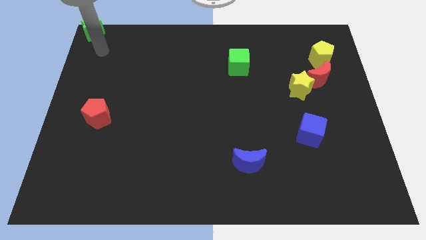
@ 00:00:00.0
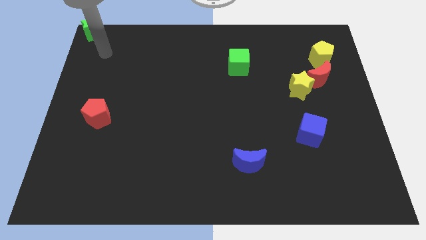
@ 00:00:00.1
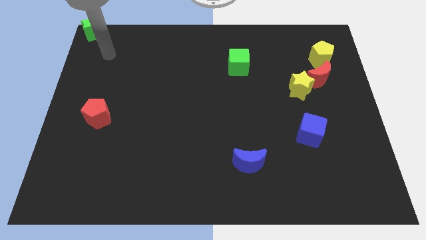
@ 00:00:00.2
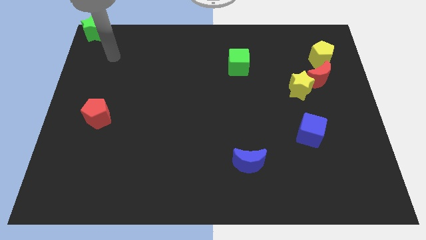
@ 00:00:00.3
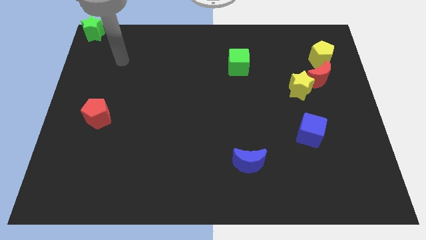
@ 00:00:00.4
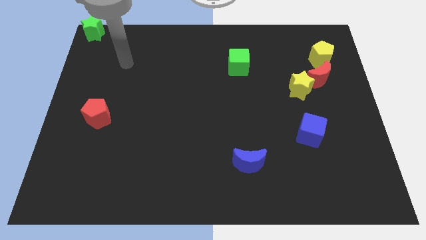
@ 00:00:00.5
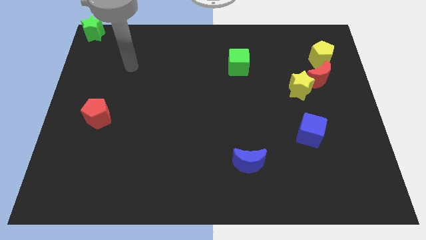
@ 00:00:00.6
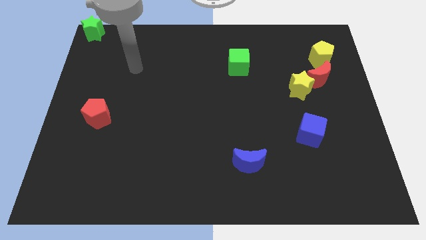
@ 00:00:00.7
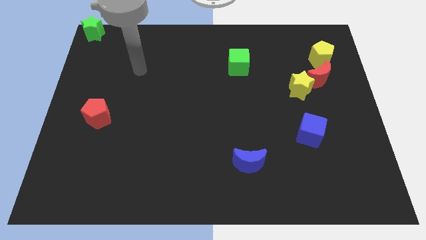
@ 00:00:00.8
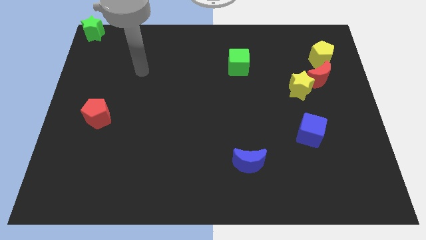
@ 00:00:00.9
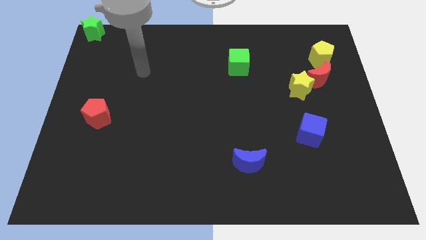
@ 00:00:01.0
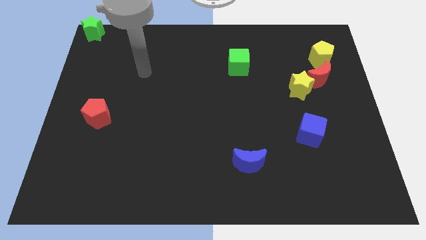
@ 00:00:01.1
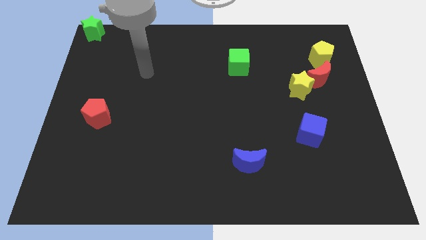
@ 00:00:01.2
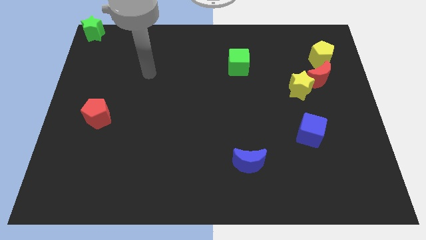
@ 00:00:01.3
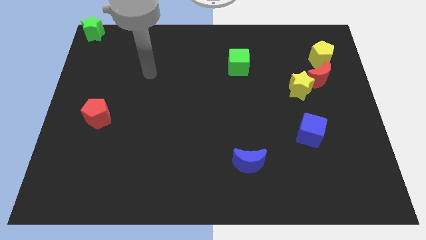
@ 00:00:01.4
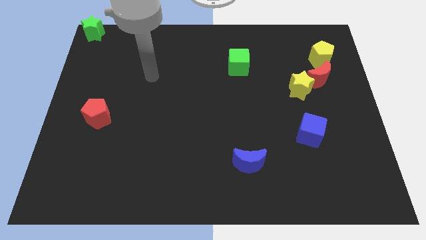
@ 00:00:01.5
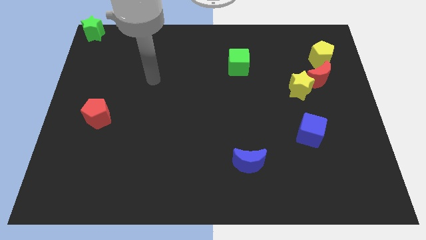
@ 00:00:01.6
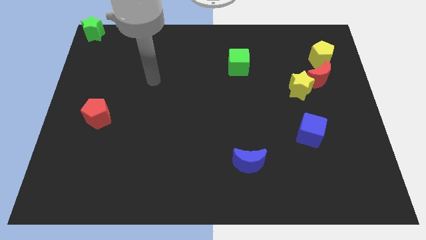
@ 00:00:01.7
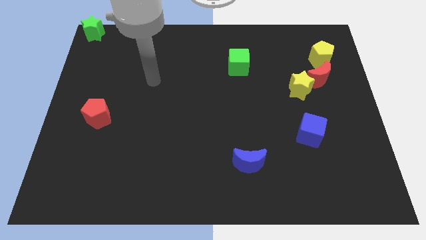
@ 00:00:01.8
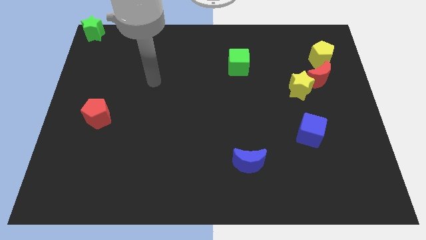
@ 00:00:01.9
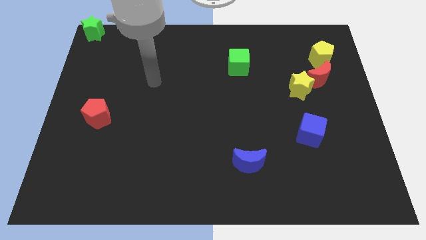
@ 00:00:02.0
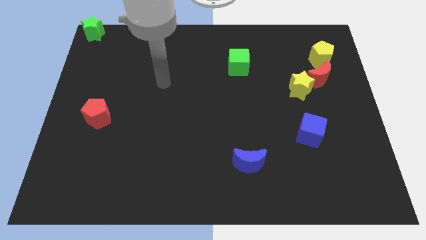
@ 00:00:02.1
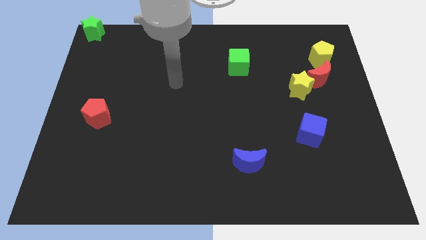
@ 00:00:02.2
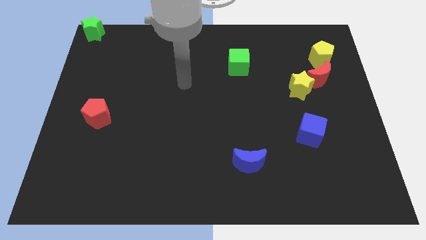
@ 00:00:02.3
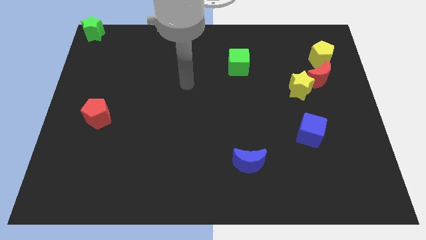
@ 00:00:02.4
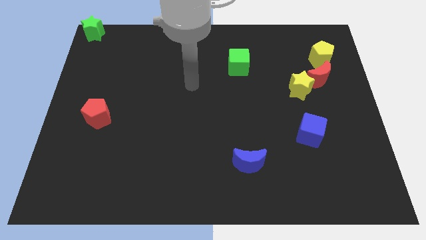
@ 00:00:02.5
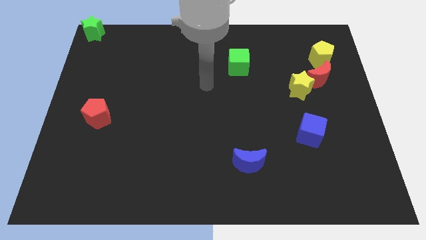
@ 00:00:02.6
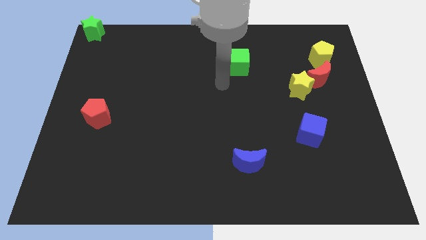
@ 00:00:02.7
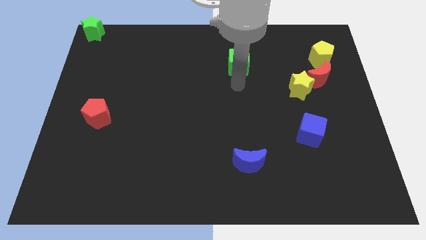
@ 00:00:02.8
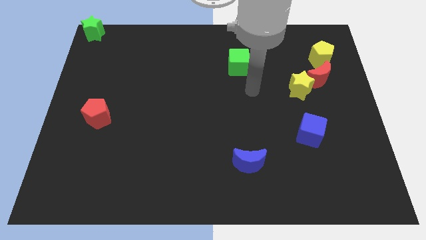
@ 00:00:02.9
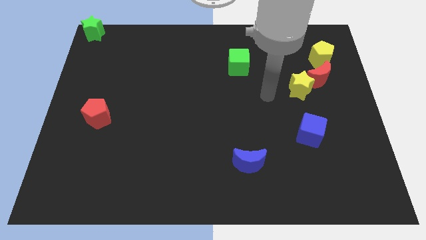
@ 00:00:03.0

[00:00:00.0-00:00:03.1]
go away from the green star

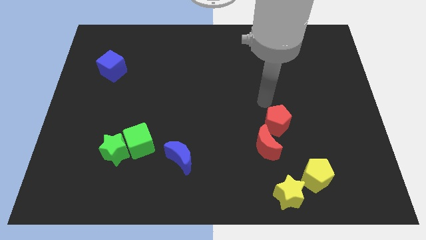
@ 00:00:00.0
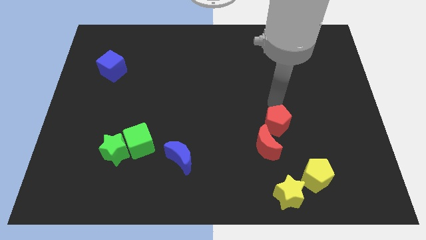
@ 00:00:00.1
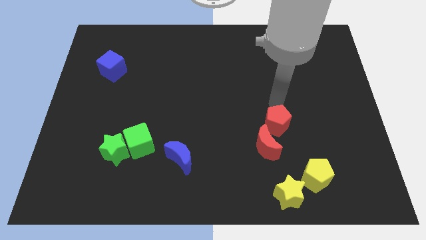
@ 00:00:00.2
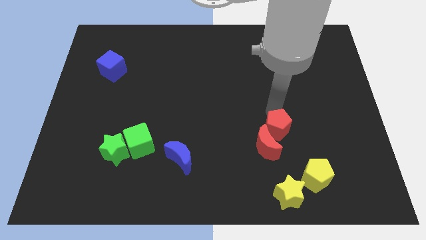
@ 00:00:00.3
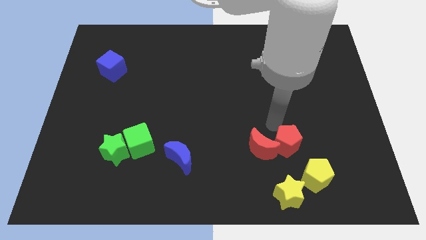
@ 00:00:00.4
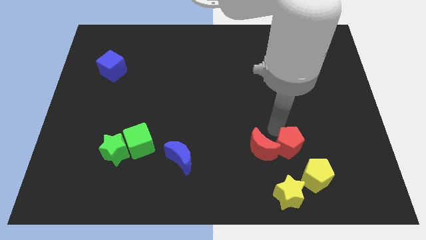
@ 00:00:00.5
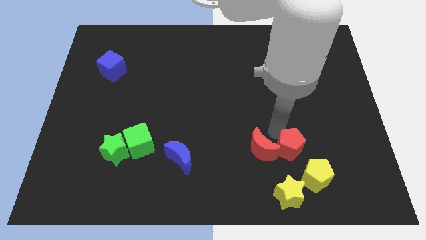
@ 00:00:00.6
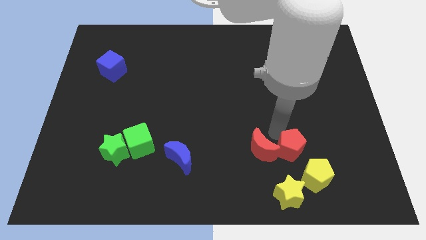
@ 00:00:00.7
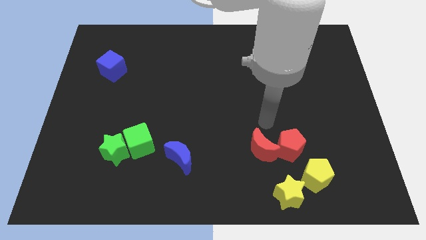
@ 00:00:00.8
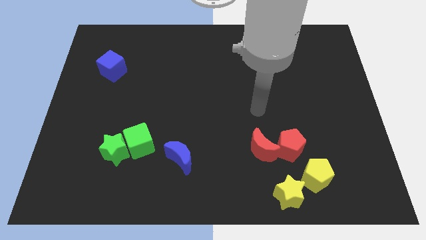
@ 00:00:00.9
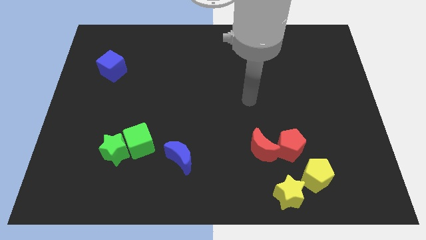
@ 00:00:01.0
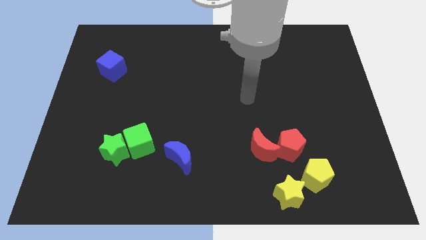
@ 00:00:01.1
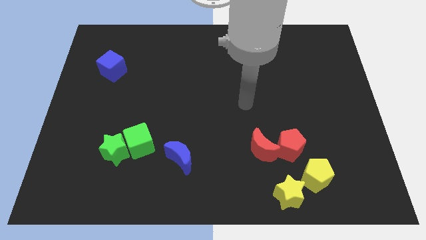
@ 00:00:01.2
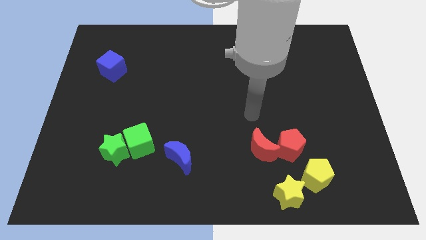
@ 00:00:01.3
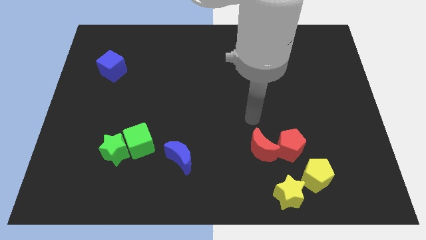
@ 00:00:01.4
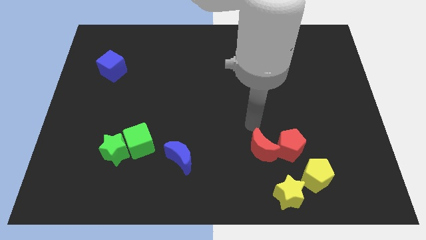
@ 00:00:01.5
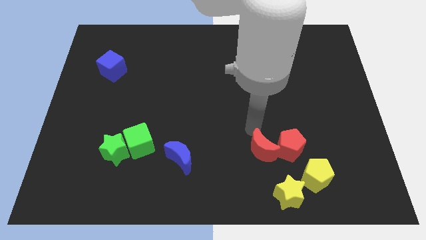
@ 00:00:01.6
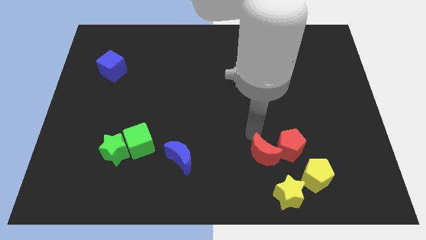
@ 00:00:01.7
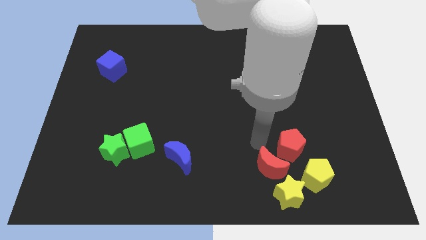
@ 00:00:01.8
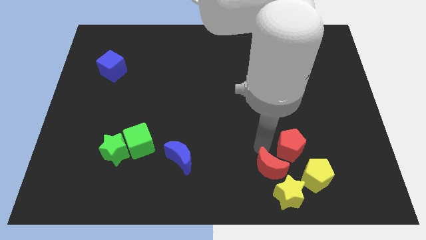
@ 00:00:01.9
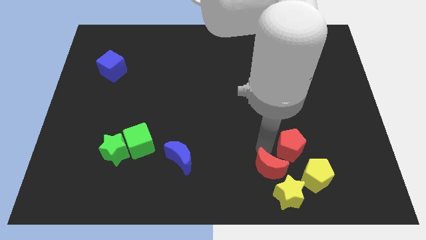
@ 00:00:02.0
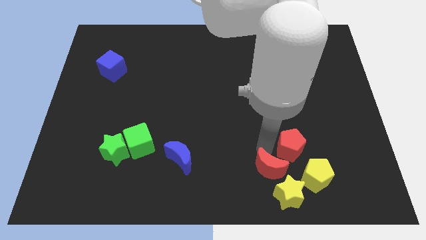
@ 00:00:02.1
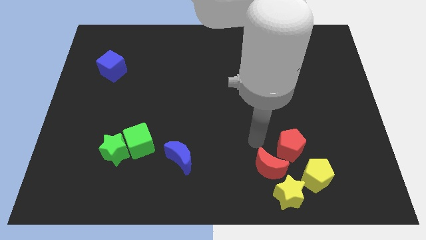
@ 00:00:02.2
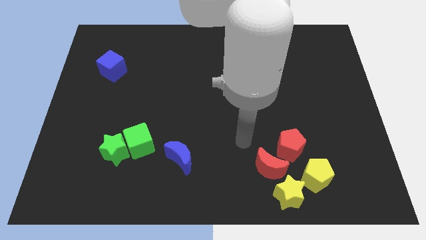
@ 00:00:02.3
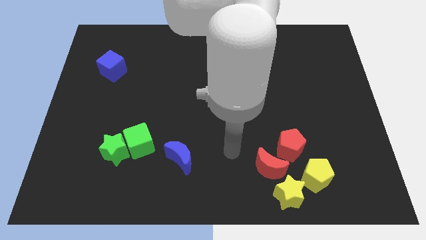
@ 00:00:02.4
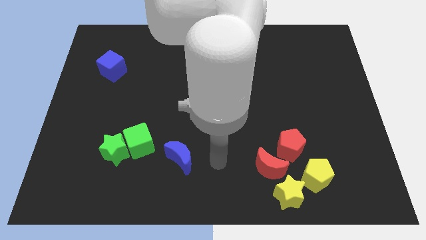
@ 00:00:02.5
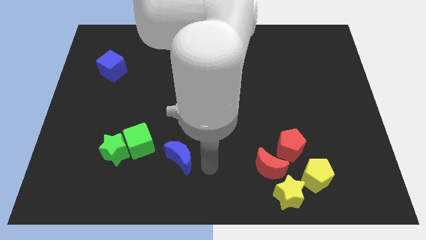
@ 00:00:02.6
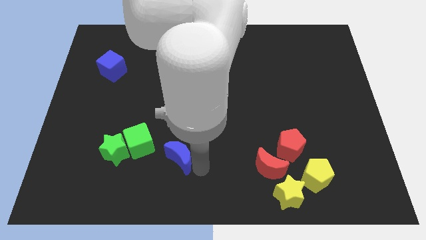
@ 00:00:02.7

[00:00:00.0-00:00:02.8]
move the group of red blocks near to the group of yellow blocks

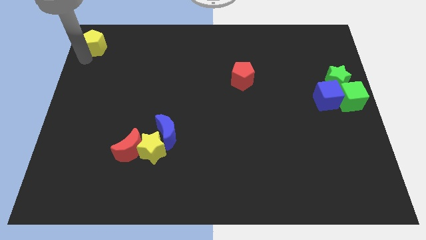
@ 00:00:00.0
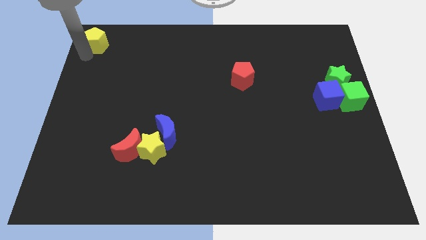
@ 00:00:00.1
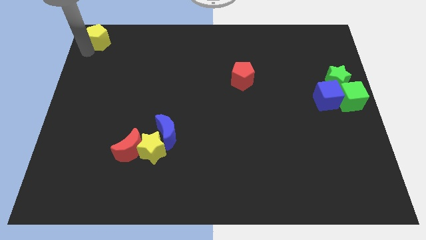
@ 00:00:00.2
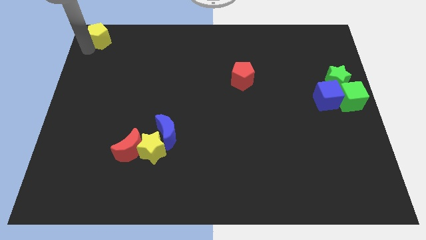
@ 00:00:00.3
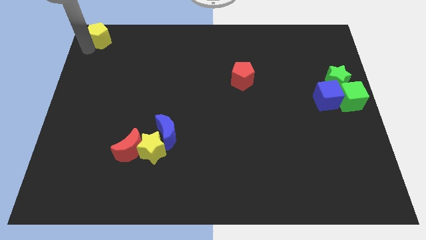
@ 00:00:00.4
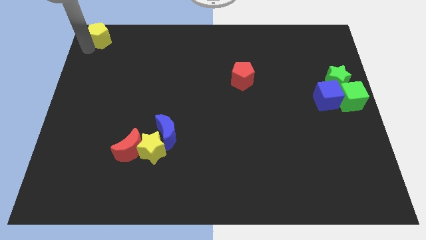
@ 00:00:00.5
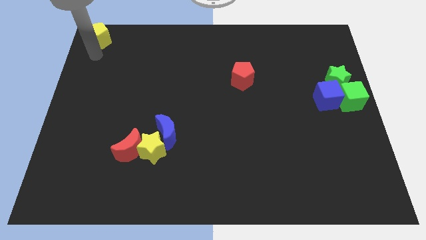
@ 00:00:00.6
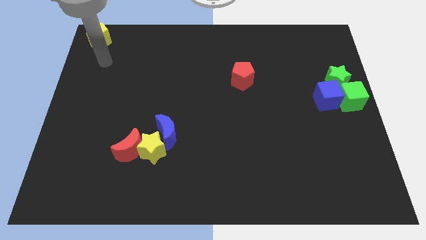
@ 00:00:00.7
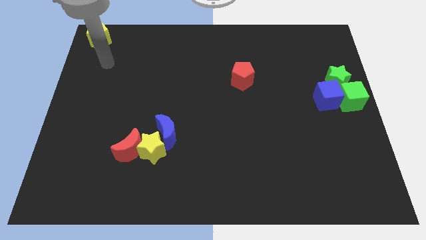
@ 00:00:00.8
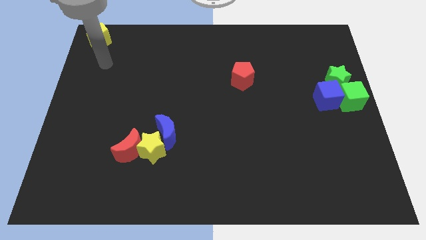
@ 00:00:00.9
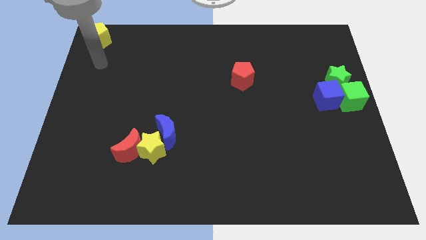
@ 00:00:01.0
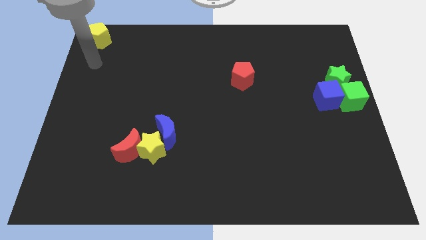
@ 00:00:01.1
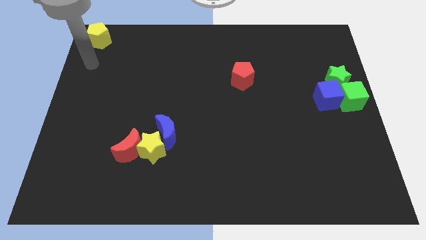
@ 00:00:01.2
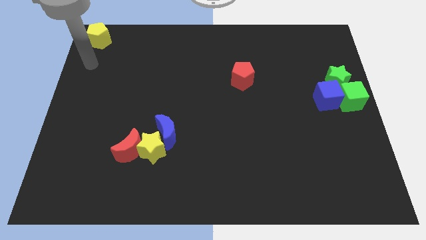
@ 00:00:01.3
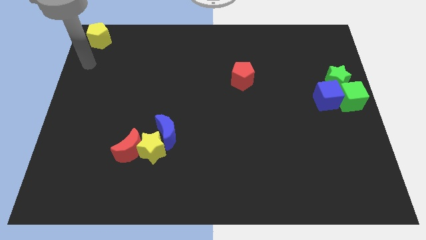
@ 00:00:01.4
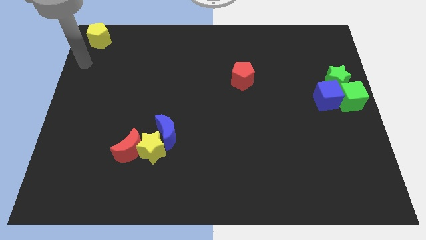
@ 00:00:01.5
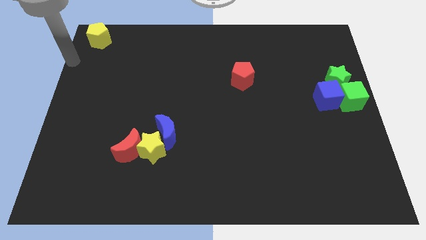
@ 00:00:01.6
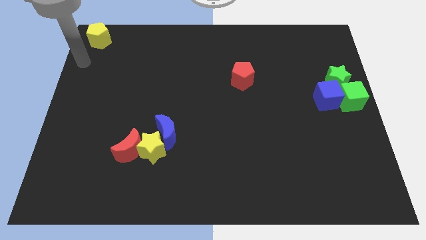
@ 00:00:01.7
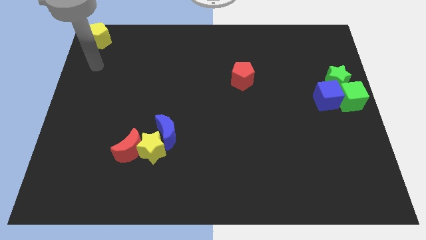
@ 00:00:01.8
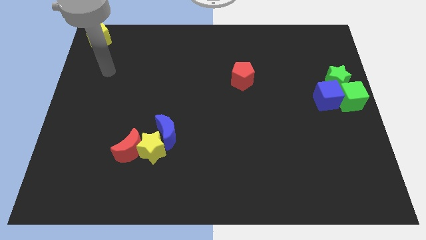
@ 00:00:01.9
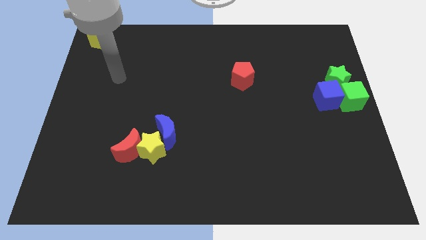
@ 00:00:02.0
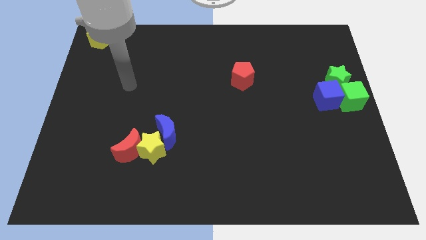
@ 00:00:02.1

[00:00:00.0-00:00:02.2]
place yellow pentagon to the top left

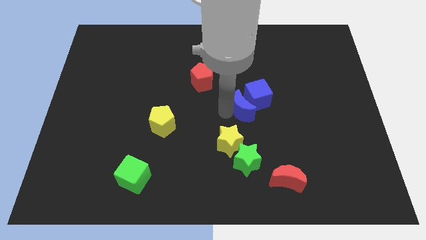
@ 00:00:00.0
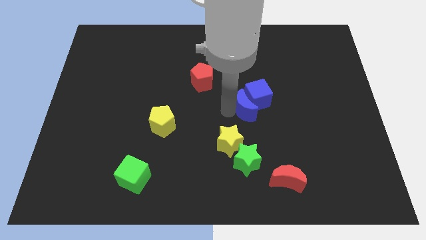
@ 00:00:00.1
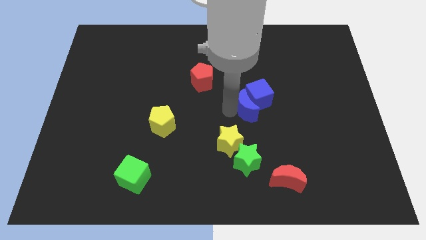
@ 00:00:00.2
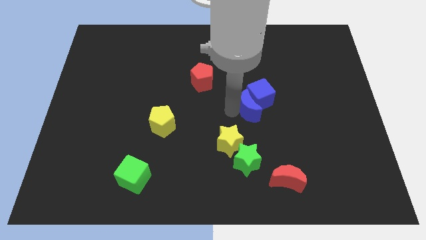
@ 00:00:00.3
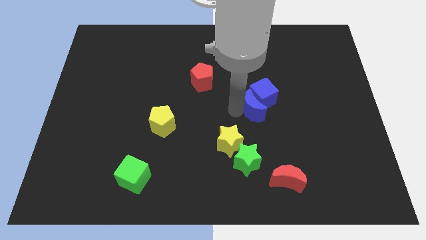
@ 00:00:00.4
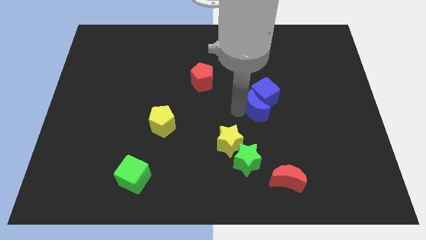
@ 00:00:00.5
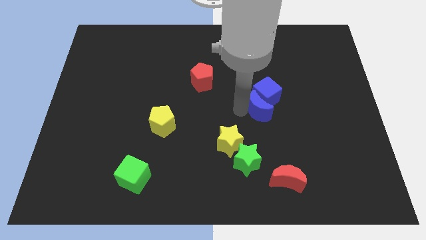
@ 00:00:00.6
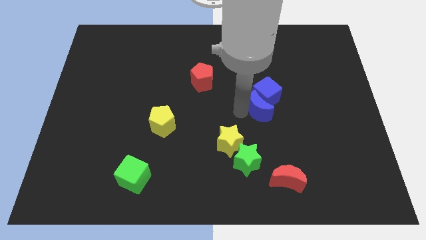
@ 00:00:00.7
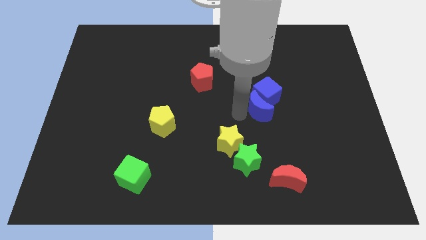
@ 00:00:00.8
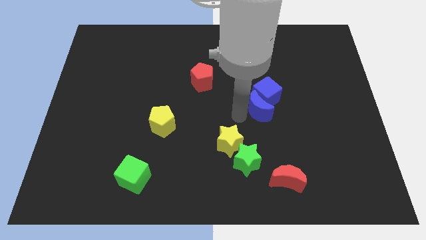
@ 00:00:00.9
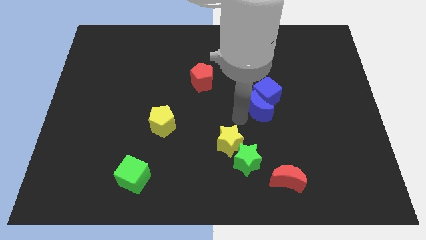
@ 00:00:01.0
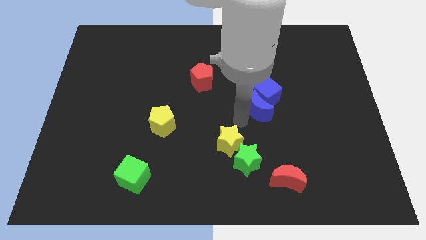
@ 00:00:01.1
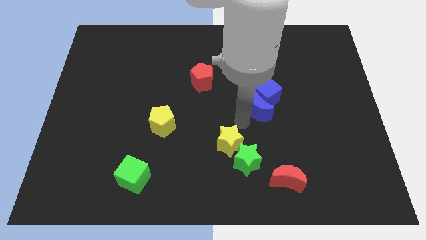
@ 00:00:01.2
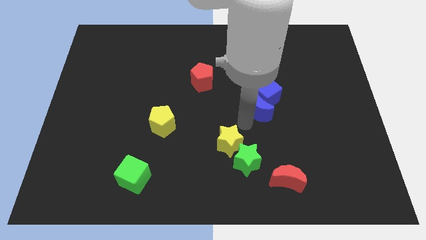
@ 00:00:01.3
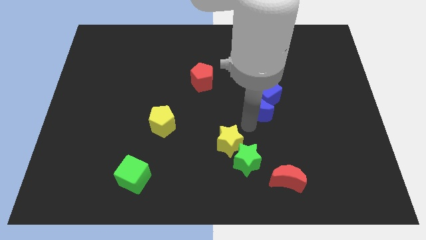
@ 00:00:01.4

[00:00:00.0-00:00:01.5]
move the blue crescent towards the blue cube
